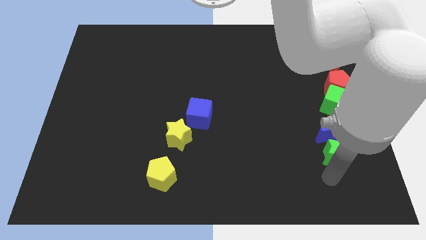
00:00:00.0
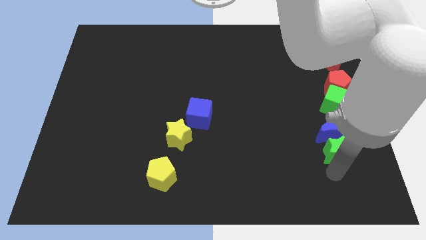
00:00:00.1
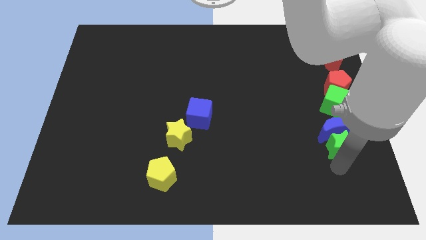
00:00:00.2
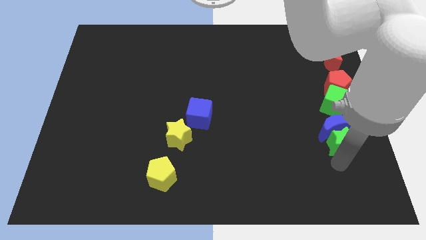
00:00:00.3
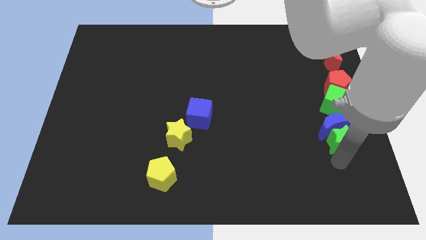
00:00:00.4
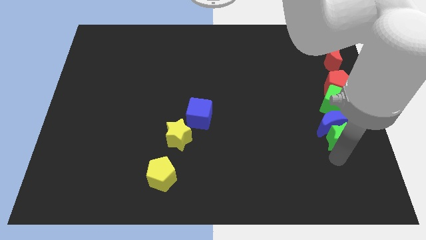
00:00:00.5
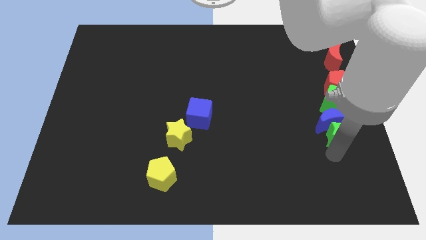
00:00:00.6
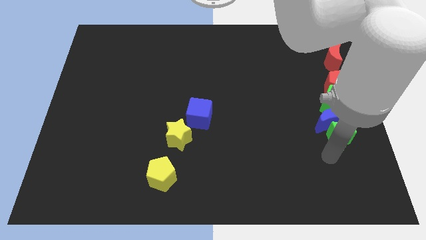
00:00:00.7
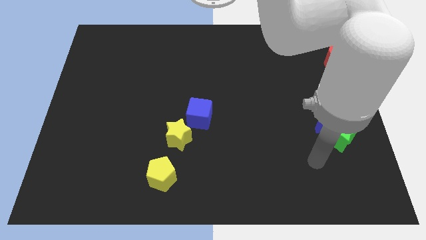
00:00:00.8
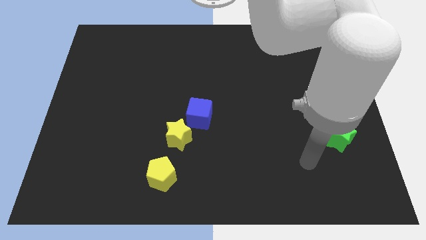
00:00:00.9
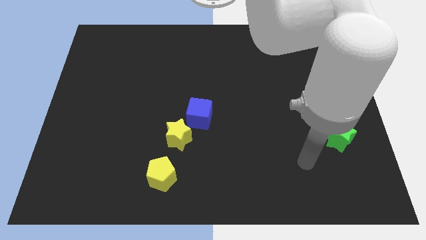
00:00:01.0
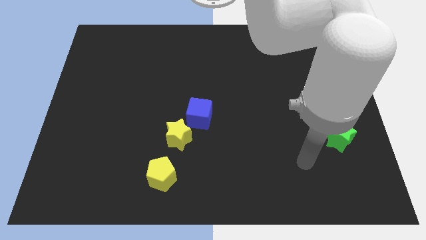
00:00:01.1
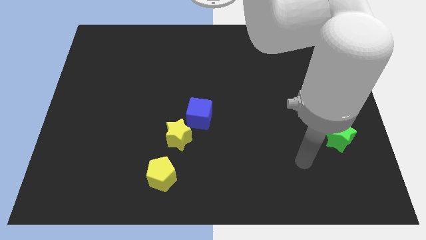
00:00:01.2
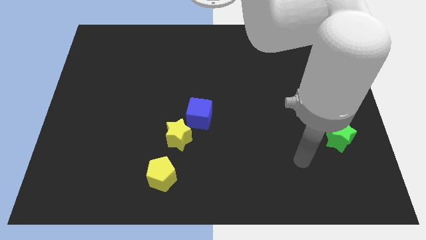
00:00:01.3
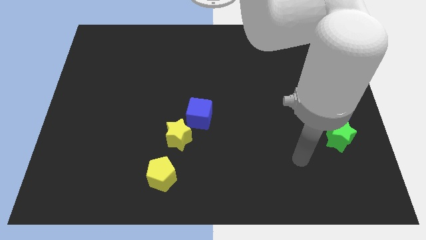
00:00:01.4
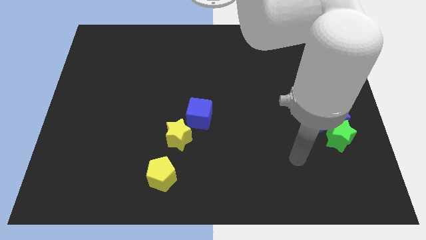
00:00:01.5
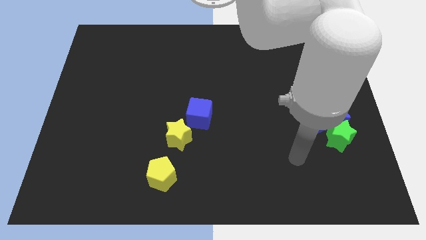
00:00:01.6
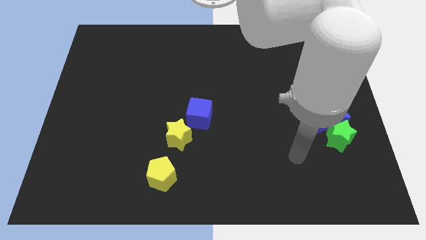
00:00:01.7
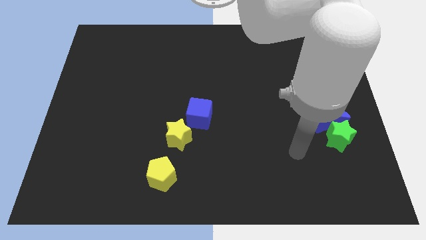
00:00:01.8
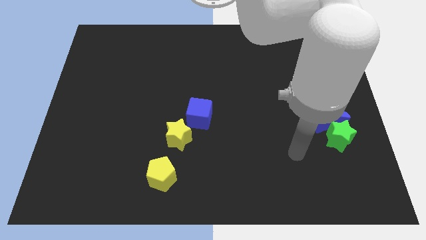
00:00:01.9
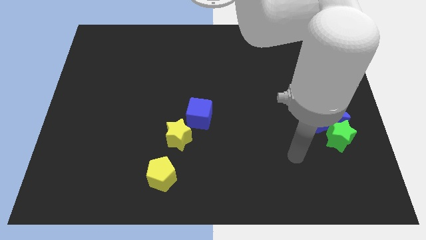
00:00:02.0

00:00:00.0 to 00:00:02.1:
push the green star into the blue moon

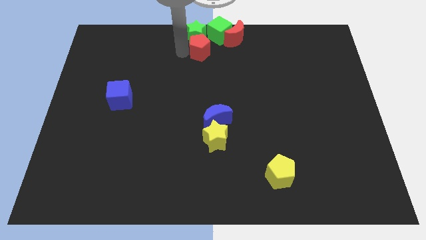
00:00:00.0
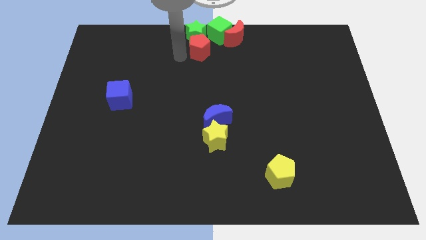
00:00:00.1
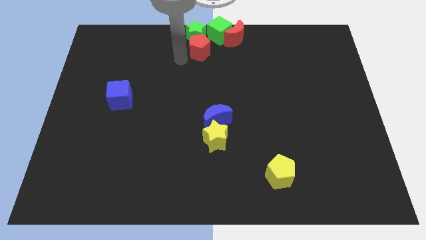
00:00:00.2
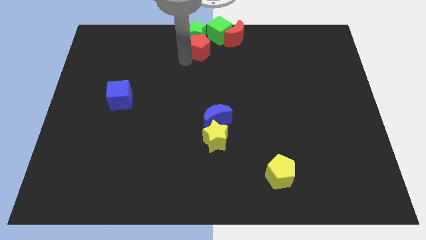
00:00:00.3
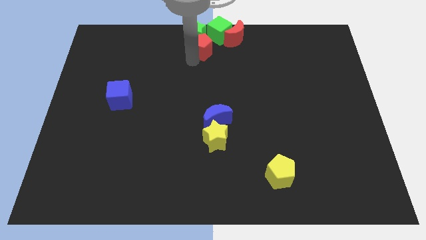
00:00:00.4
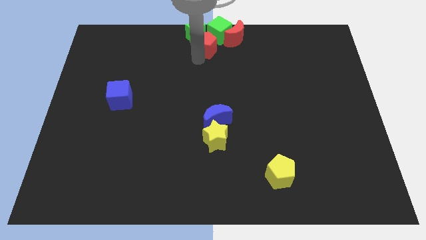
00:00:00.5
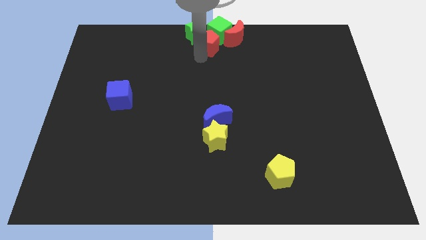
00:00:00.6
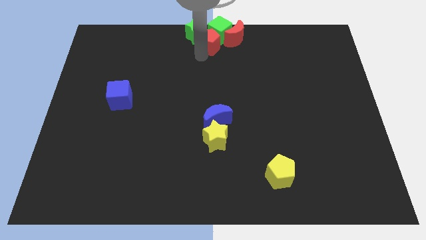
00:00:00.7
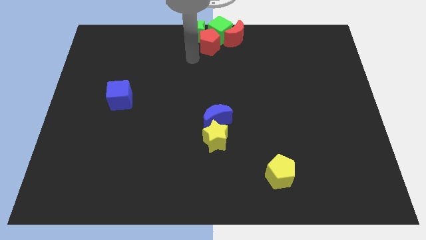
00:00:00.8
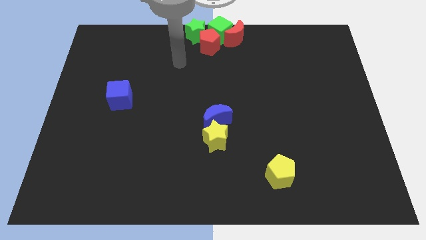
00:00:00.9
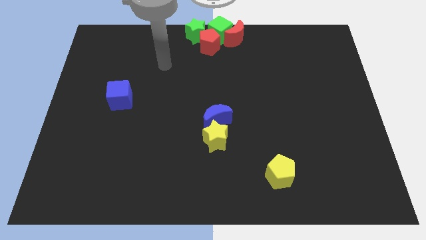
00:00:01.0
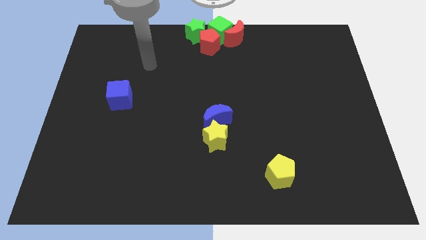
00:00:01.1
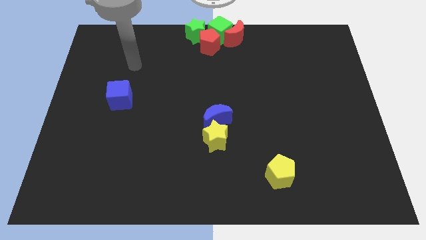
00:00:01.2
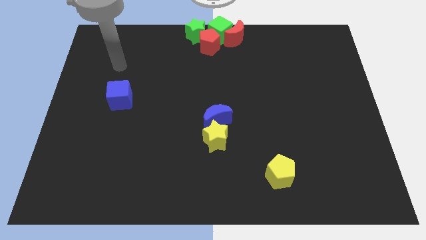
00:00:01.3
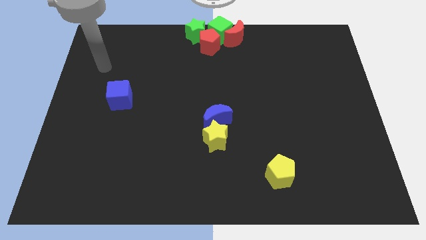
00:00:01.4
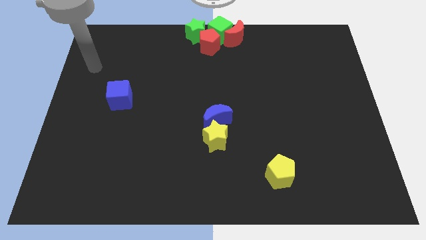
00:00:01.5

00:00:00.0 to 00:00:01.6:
push the red pentagon into the group of objects

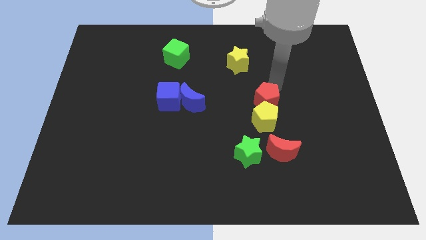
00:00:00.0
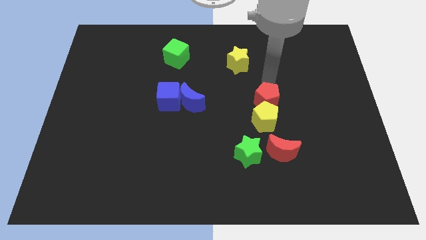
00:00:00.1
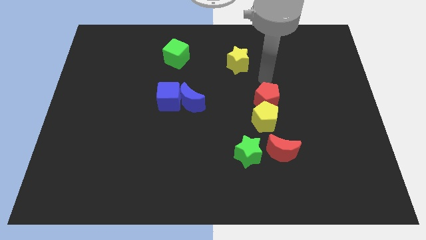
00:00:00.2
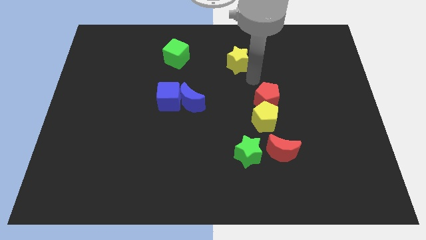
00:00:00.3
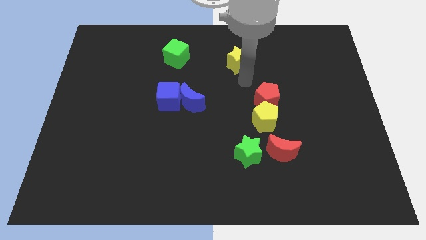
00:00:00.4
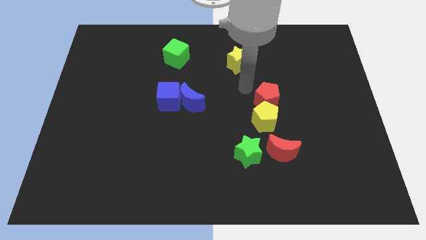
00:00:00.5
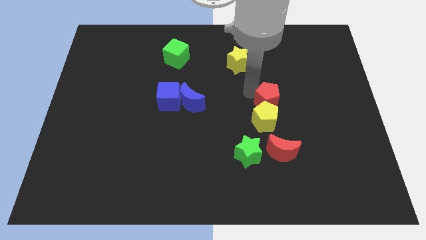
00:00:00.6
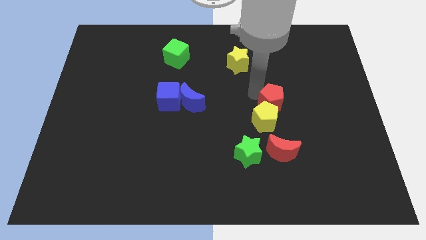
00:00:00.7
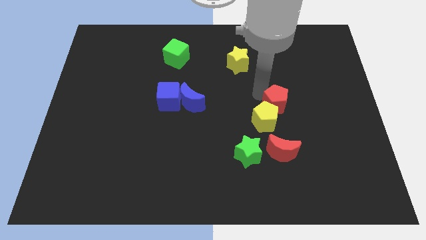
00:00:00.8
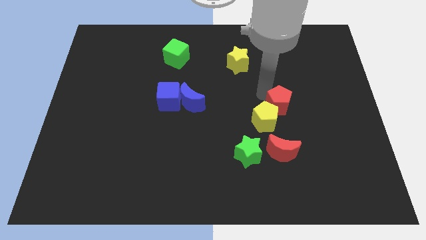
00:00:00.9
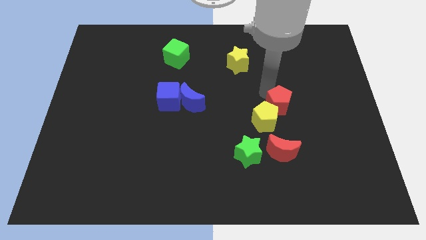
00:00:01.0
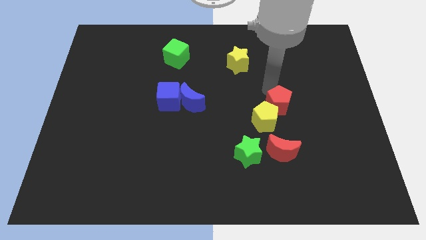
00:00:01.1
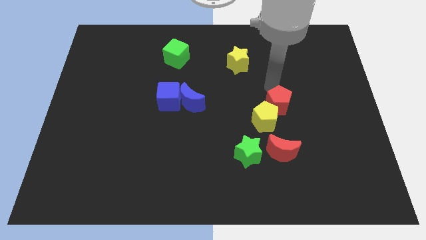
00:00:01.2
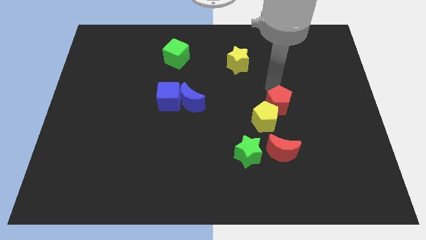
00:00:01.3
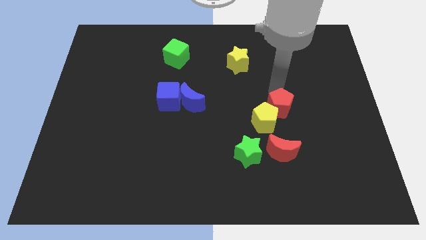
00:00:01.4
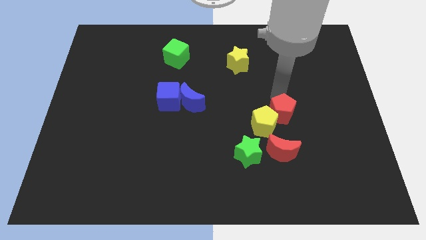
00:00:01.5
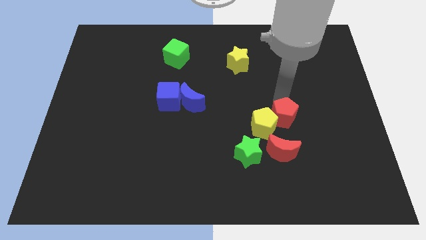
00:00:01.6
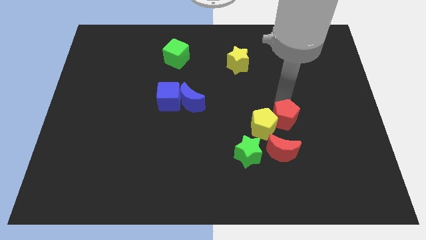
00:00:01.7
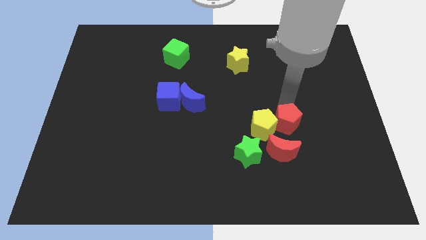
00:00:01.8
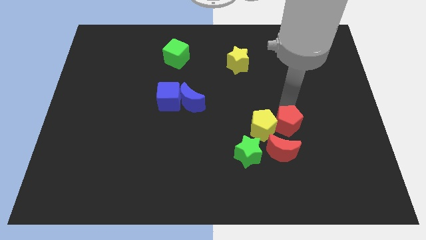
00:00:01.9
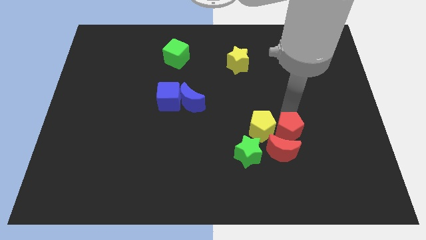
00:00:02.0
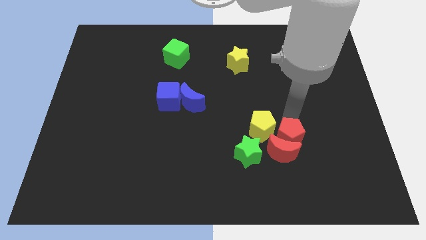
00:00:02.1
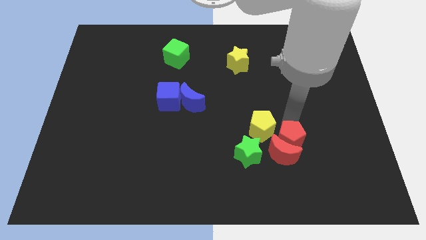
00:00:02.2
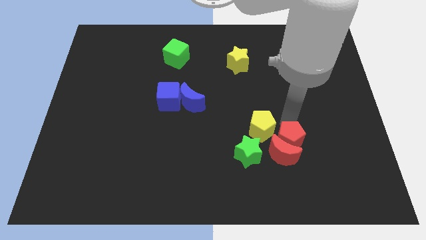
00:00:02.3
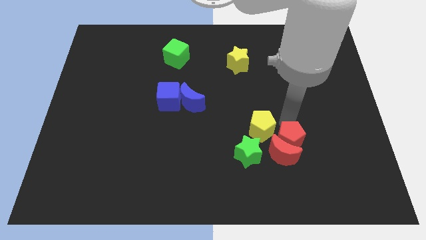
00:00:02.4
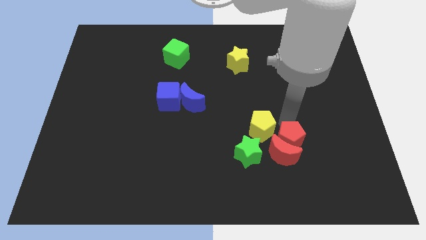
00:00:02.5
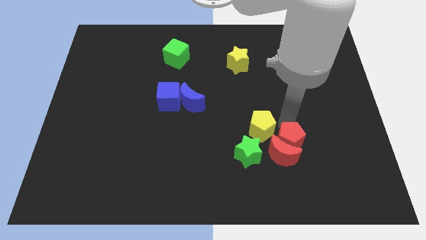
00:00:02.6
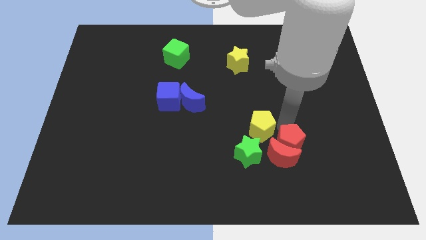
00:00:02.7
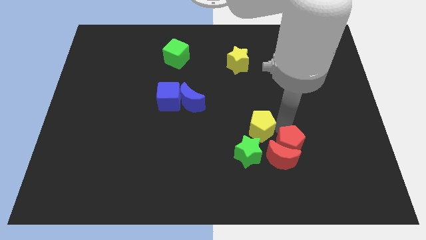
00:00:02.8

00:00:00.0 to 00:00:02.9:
push the red pentagon above the red crescent

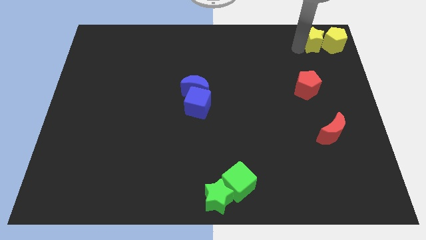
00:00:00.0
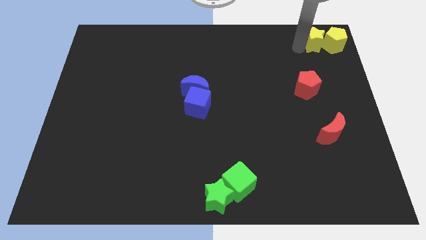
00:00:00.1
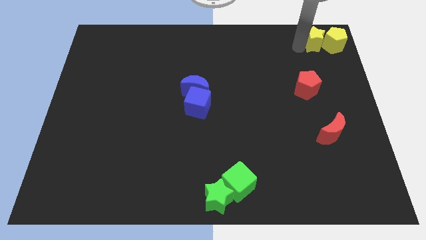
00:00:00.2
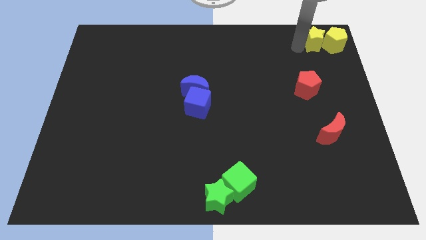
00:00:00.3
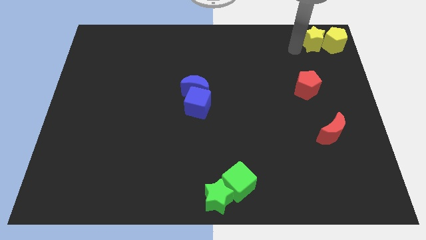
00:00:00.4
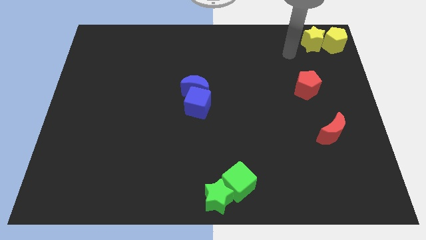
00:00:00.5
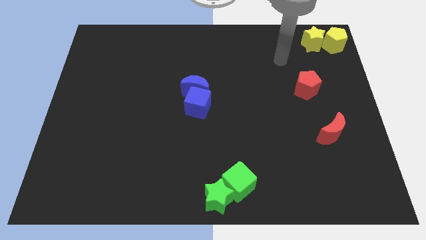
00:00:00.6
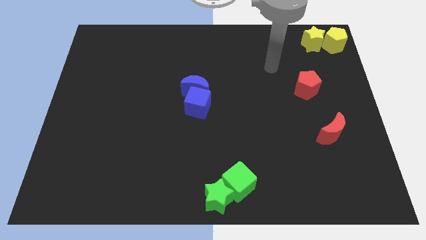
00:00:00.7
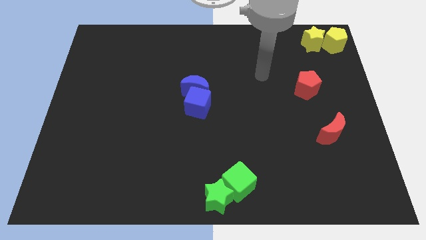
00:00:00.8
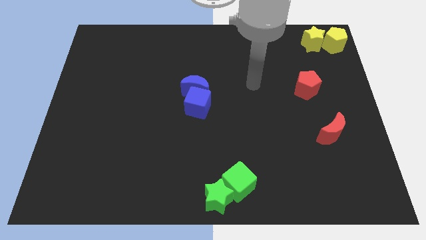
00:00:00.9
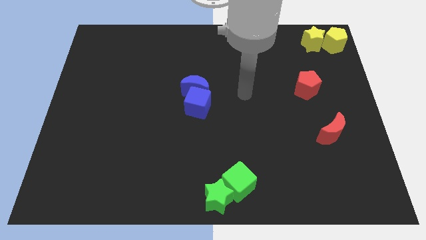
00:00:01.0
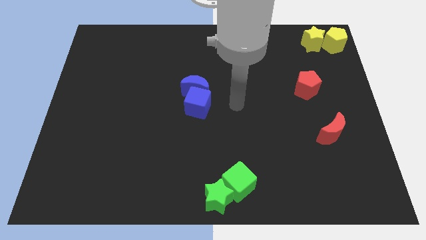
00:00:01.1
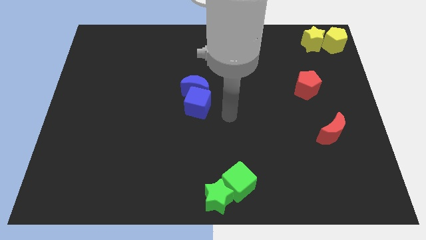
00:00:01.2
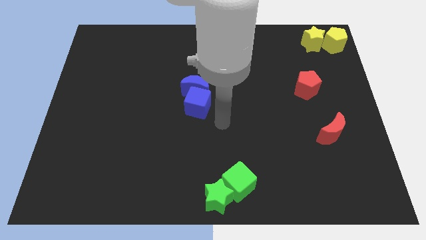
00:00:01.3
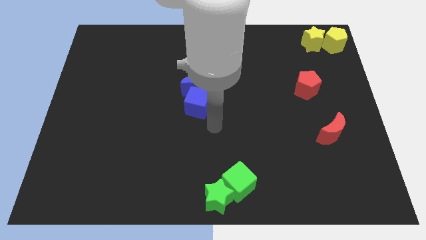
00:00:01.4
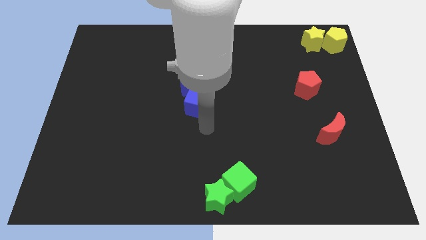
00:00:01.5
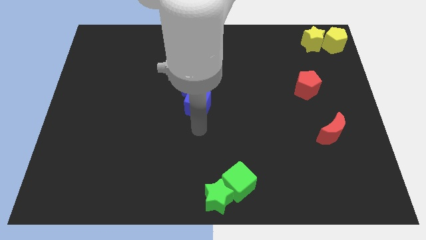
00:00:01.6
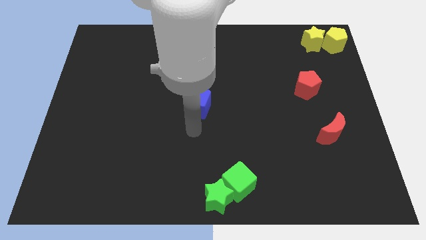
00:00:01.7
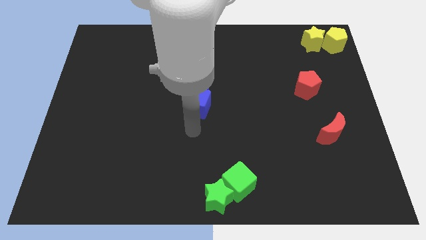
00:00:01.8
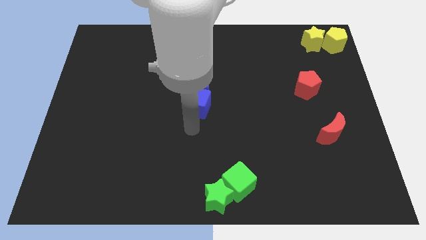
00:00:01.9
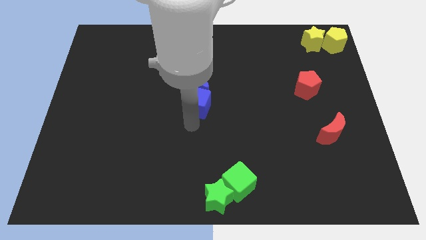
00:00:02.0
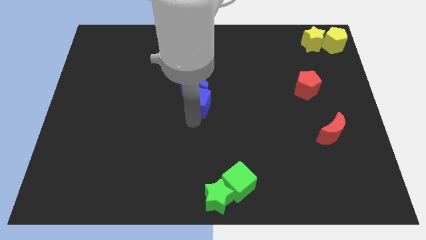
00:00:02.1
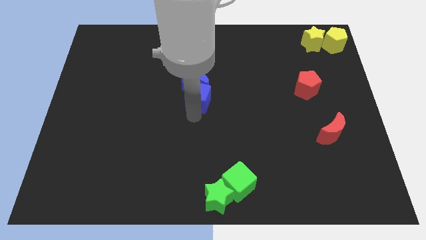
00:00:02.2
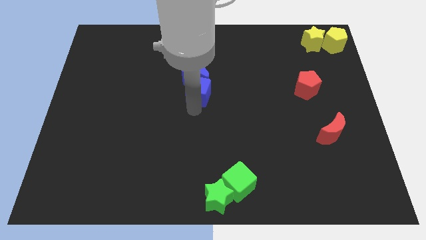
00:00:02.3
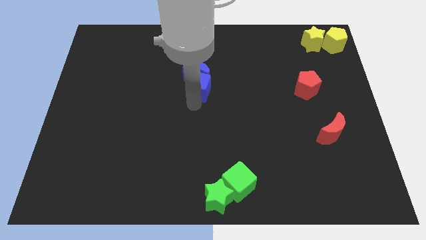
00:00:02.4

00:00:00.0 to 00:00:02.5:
push blue cube upwards
